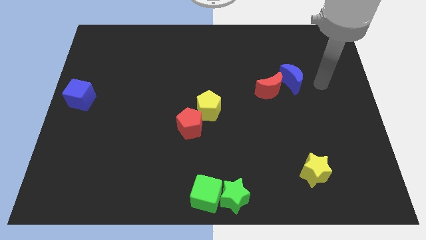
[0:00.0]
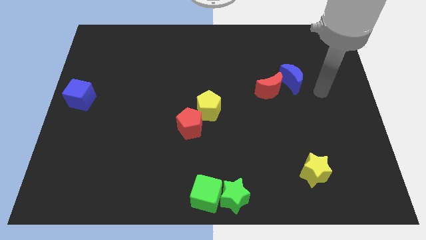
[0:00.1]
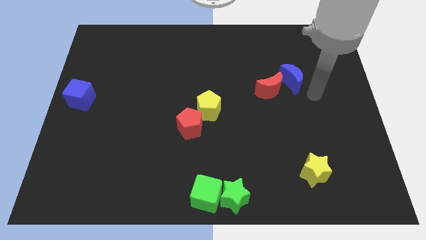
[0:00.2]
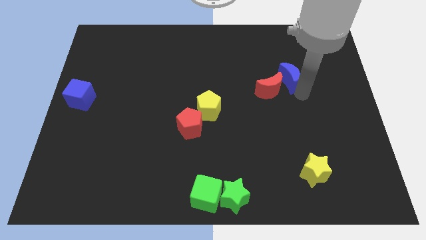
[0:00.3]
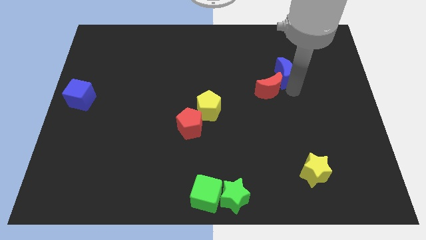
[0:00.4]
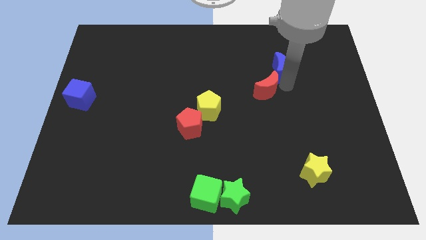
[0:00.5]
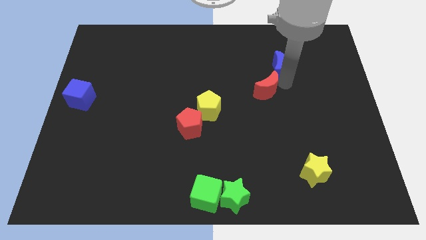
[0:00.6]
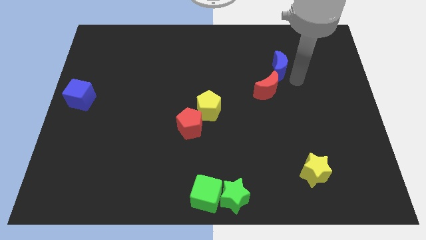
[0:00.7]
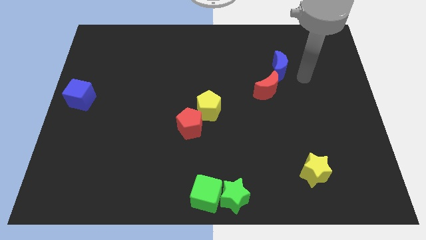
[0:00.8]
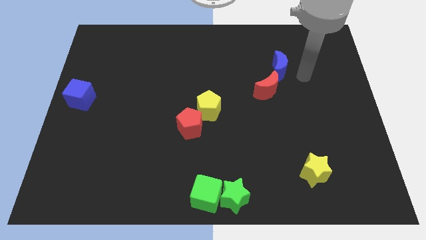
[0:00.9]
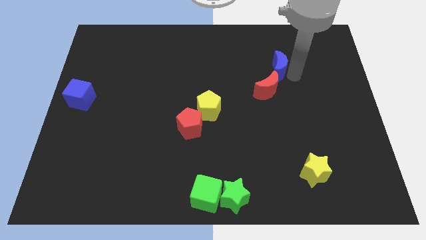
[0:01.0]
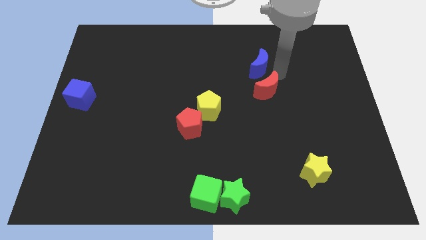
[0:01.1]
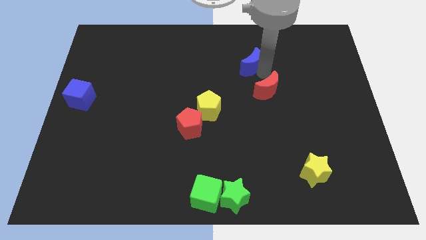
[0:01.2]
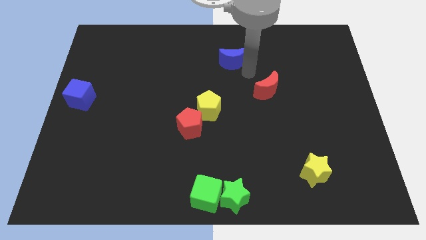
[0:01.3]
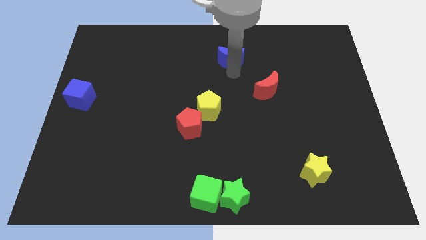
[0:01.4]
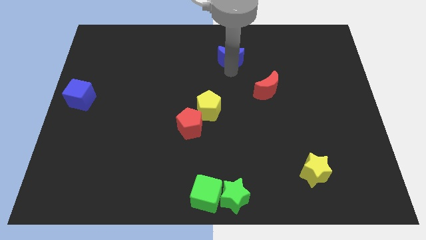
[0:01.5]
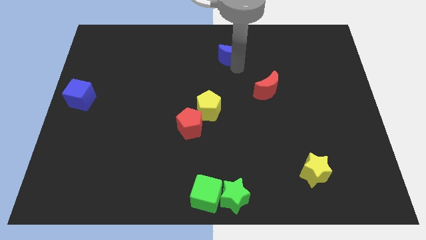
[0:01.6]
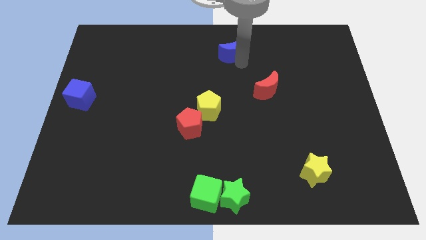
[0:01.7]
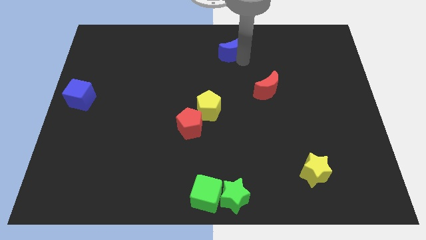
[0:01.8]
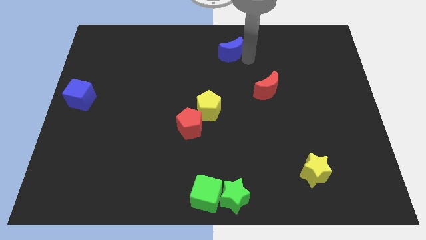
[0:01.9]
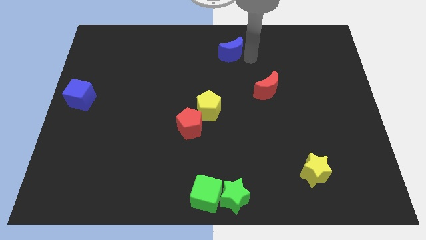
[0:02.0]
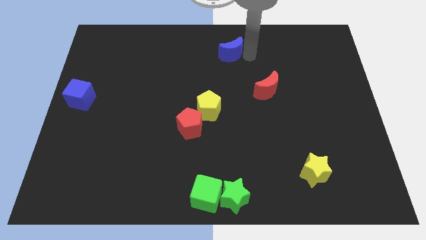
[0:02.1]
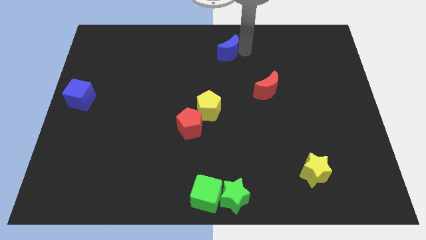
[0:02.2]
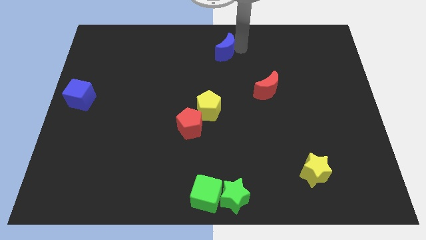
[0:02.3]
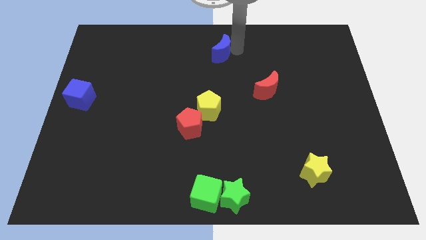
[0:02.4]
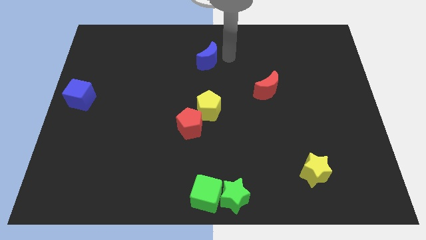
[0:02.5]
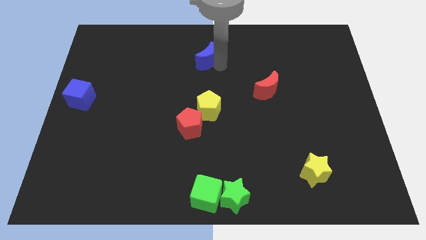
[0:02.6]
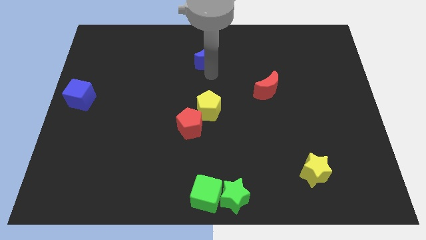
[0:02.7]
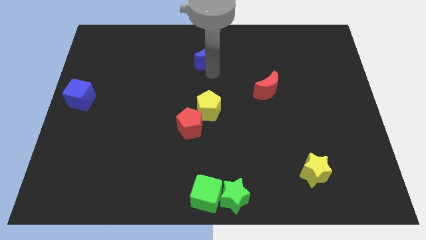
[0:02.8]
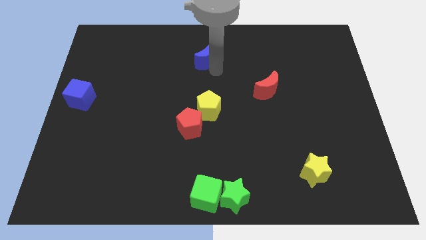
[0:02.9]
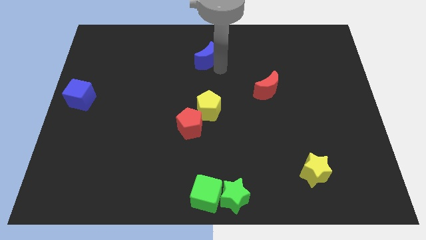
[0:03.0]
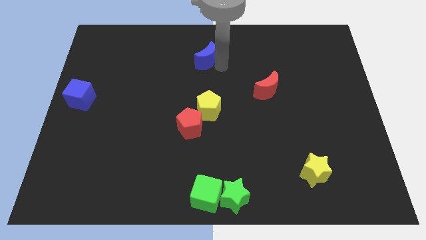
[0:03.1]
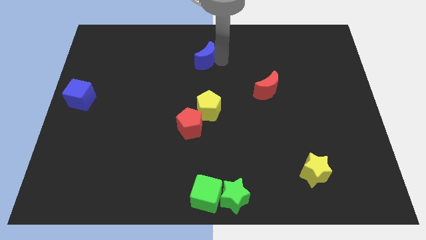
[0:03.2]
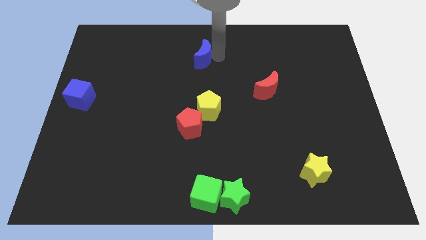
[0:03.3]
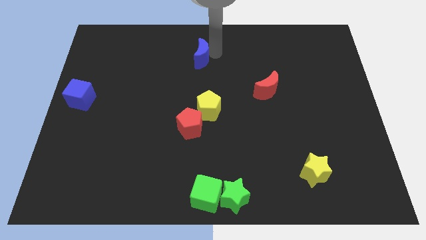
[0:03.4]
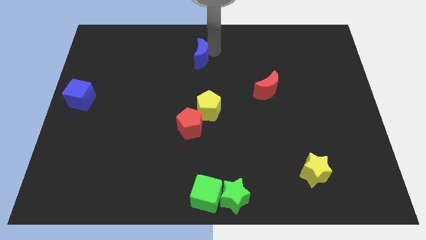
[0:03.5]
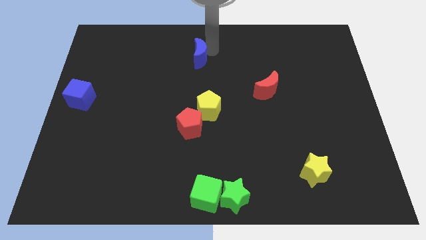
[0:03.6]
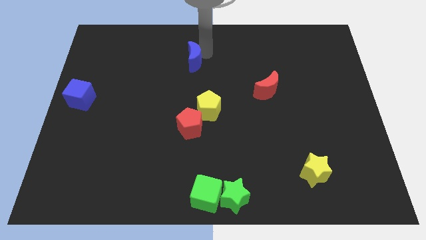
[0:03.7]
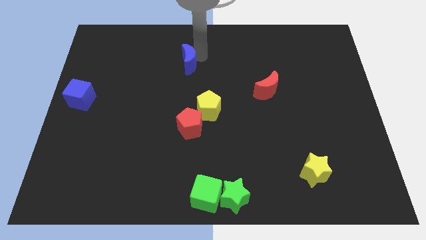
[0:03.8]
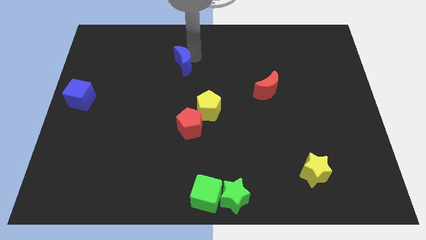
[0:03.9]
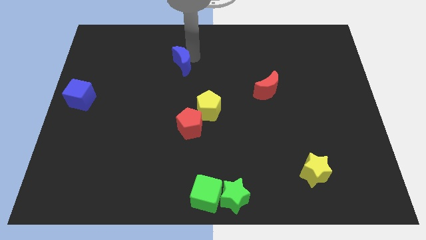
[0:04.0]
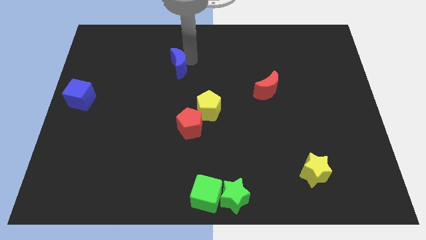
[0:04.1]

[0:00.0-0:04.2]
separate blue moon from red moon

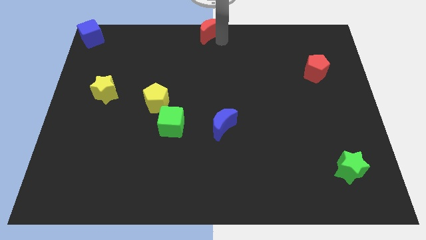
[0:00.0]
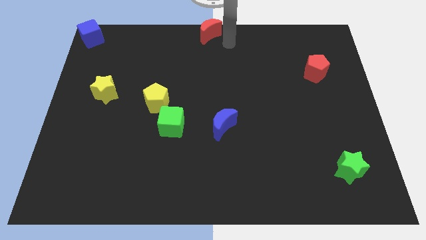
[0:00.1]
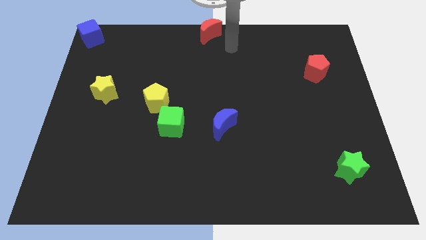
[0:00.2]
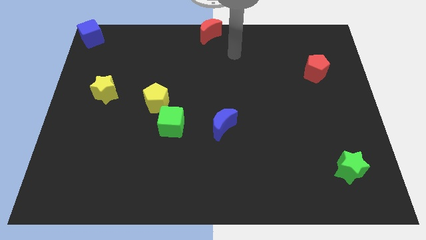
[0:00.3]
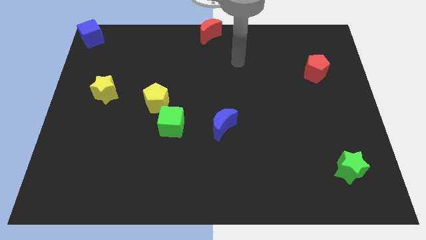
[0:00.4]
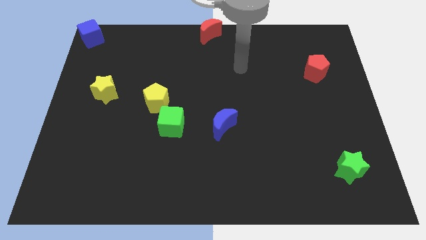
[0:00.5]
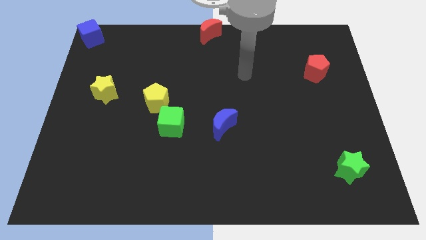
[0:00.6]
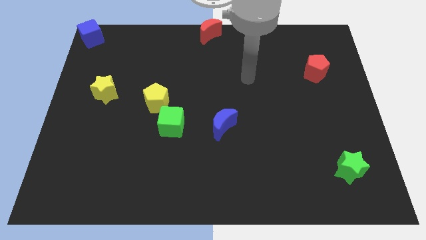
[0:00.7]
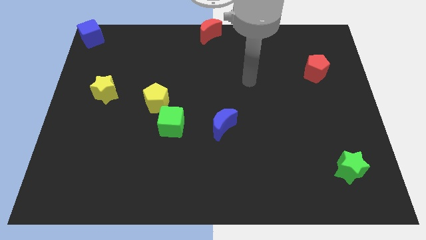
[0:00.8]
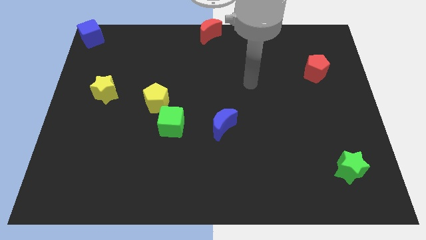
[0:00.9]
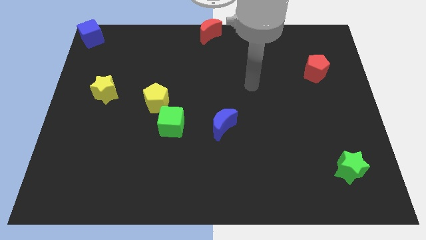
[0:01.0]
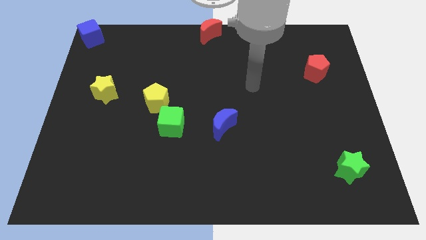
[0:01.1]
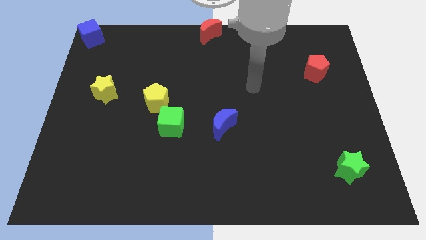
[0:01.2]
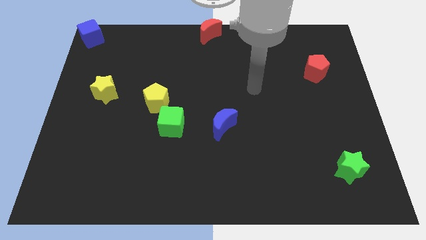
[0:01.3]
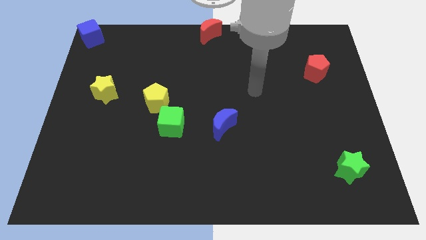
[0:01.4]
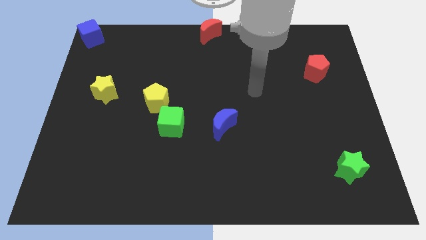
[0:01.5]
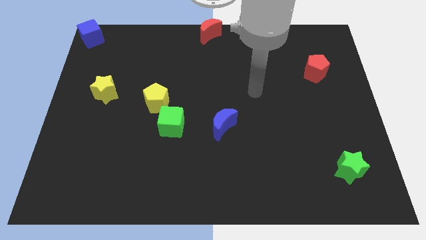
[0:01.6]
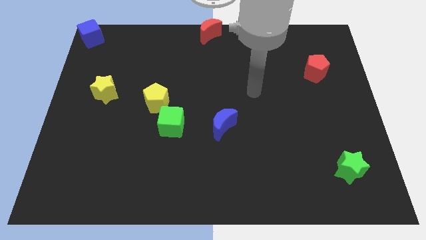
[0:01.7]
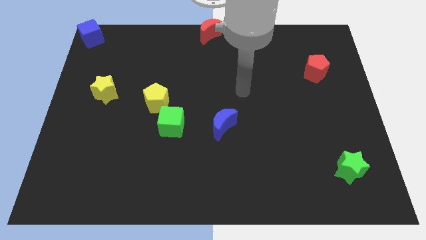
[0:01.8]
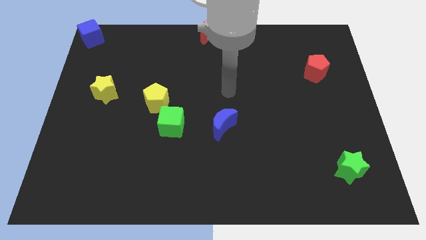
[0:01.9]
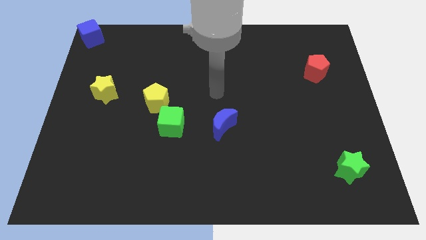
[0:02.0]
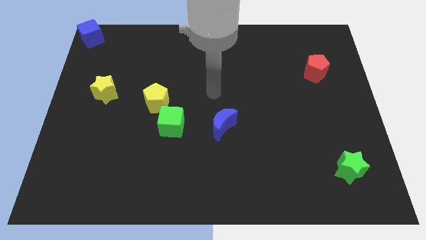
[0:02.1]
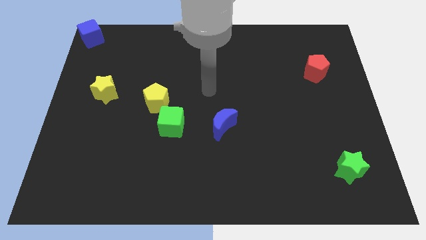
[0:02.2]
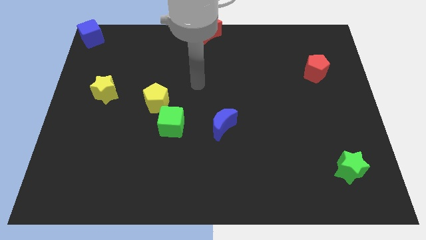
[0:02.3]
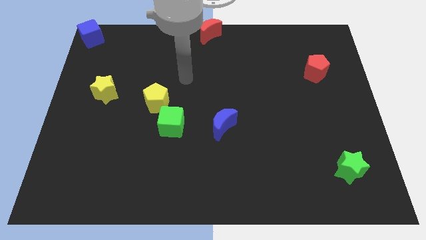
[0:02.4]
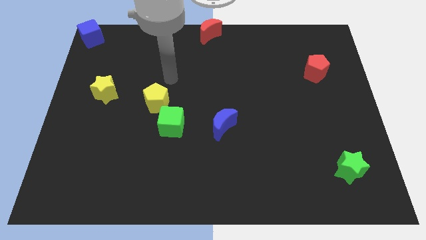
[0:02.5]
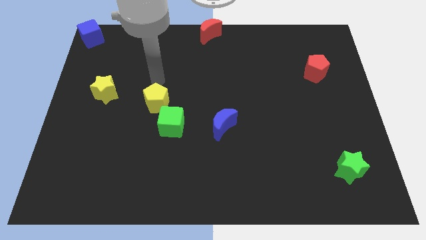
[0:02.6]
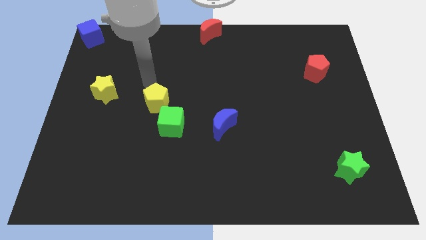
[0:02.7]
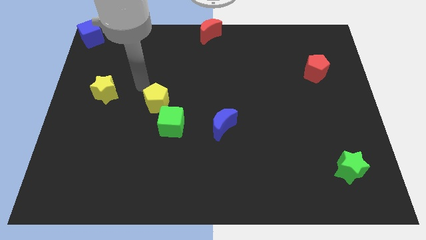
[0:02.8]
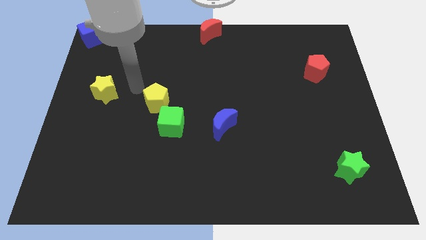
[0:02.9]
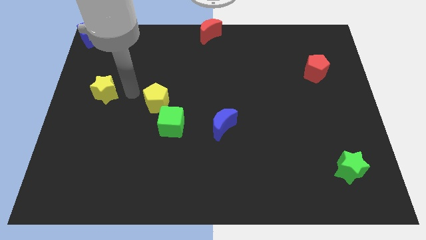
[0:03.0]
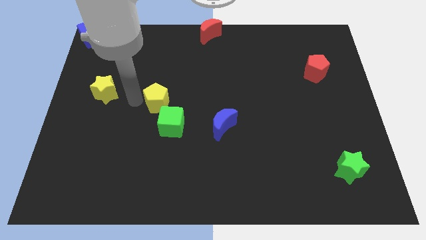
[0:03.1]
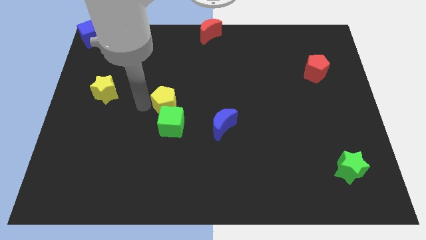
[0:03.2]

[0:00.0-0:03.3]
place your arm to the left of the yellow pentagon

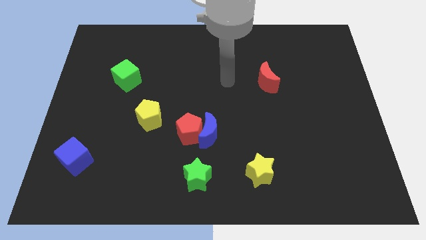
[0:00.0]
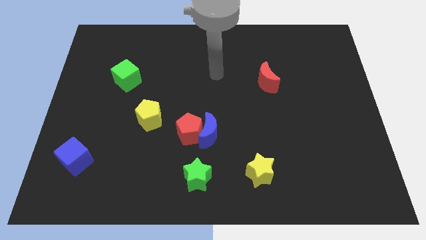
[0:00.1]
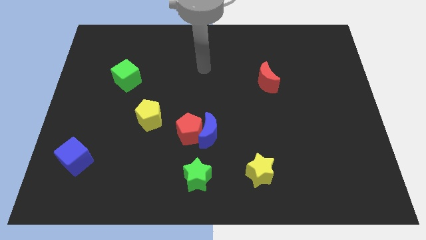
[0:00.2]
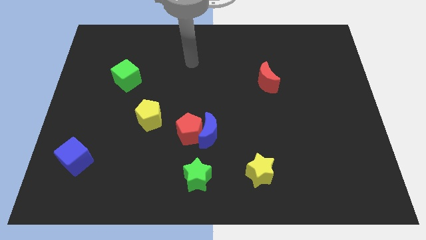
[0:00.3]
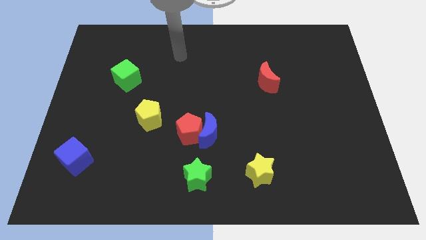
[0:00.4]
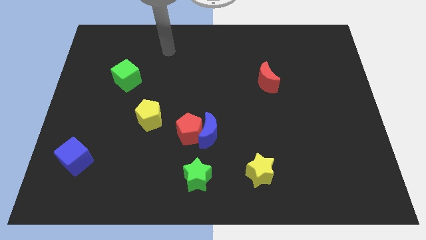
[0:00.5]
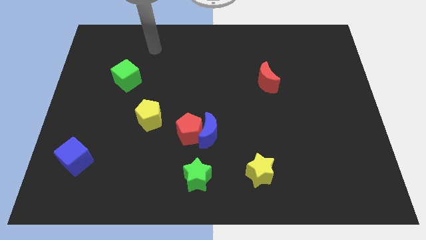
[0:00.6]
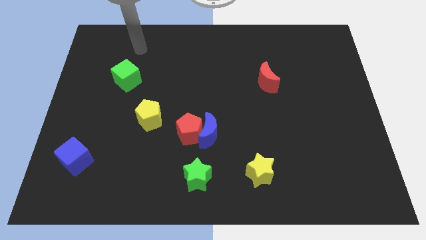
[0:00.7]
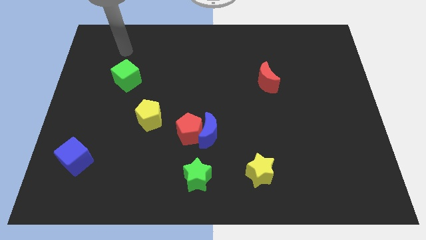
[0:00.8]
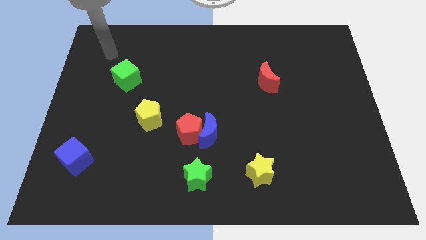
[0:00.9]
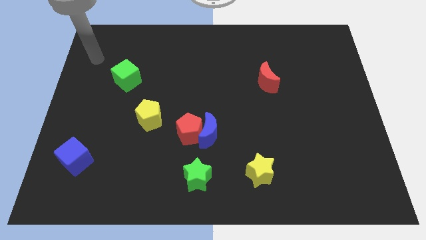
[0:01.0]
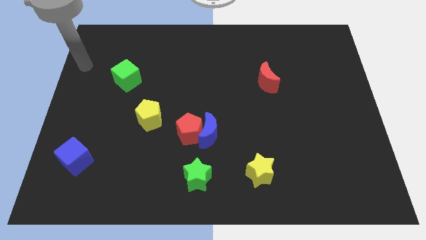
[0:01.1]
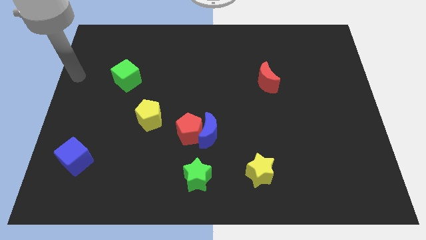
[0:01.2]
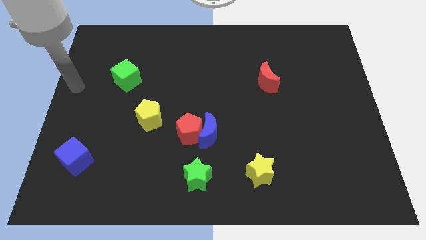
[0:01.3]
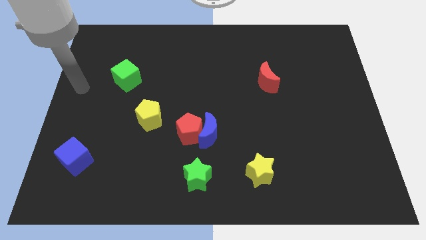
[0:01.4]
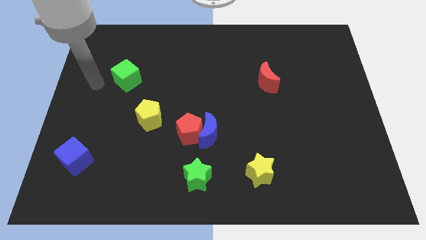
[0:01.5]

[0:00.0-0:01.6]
go to the left side of the green cube
